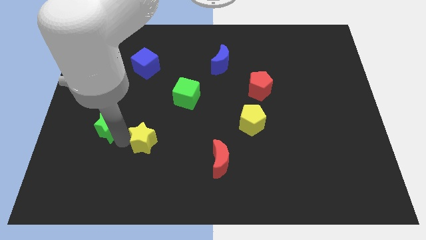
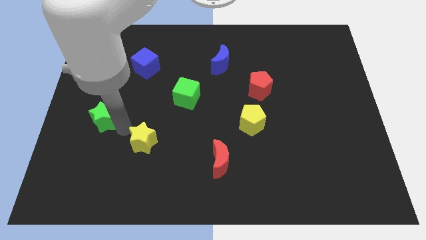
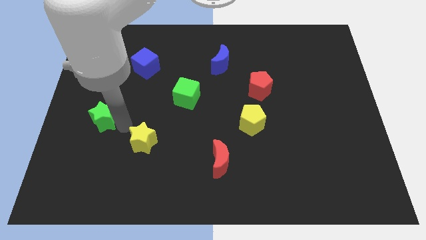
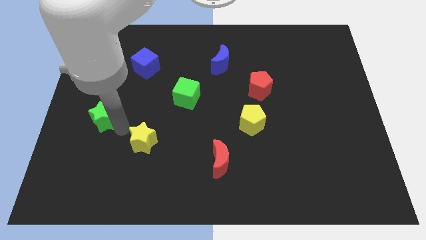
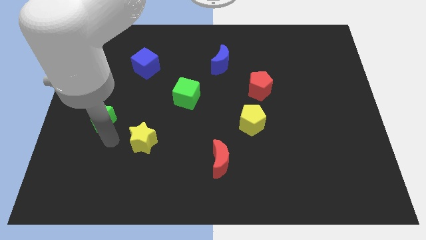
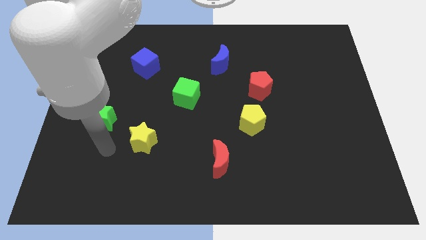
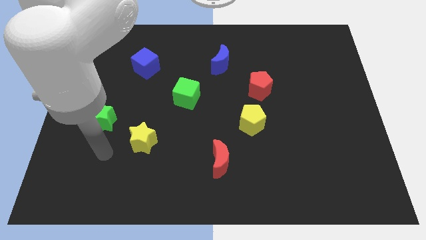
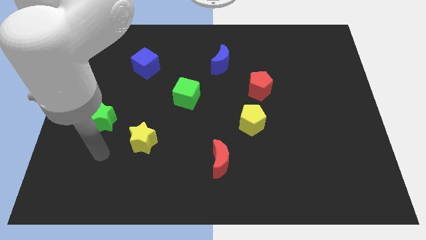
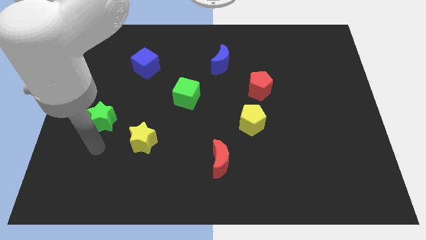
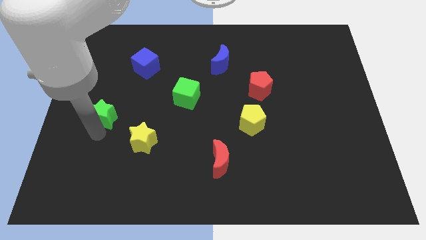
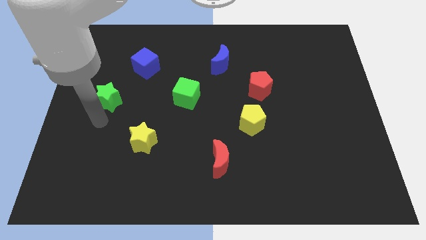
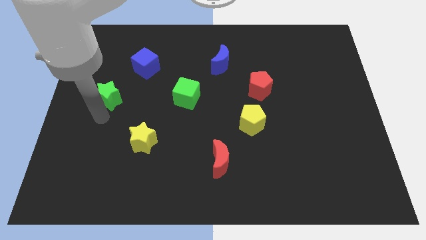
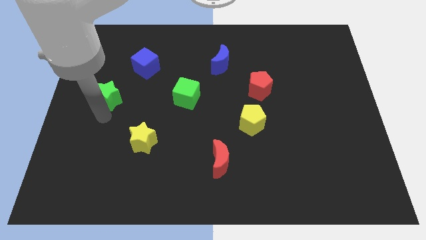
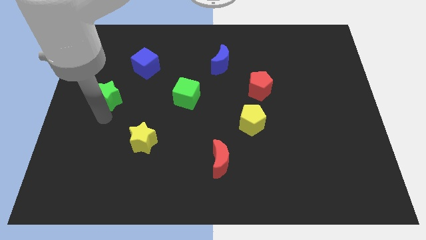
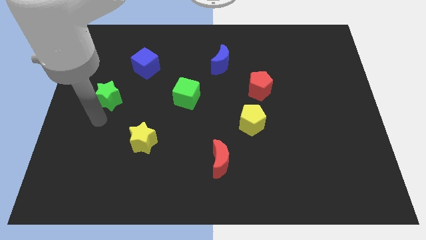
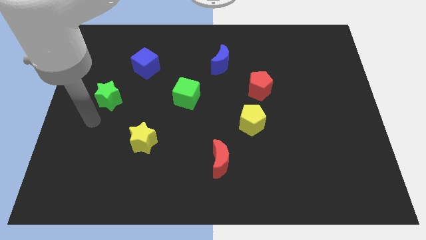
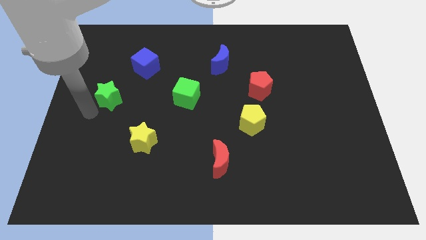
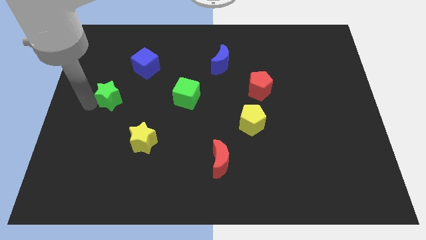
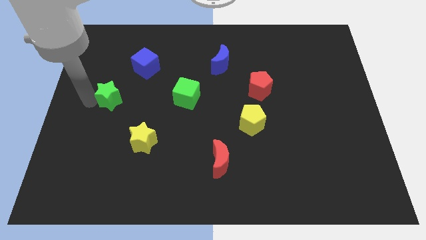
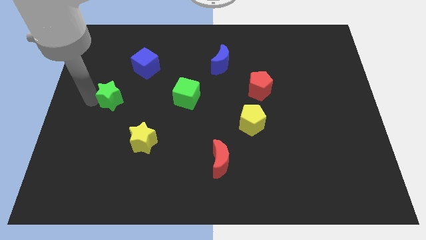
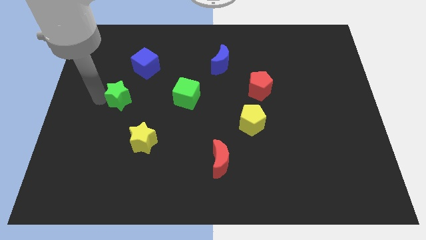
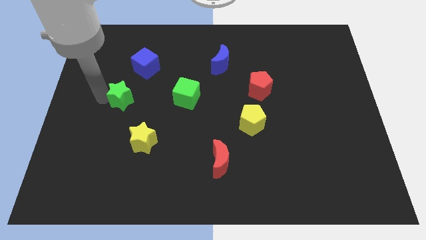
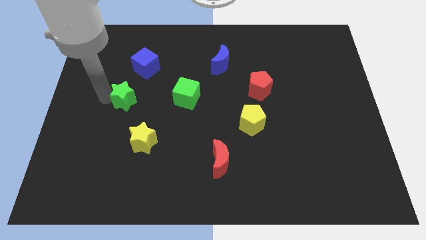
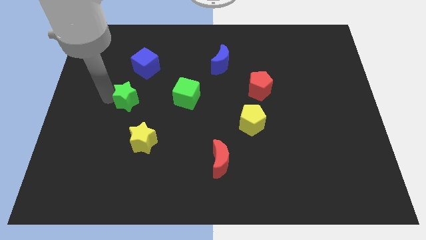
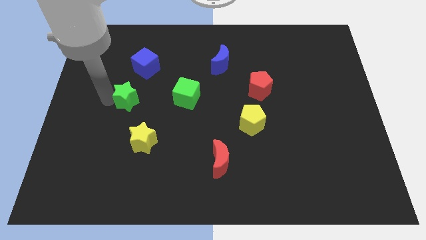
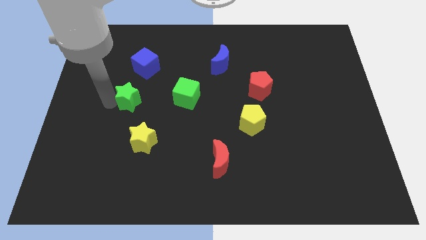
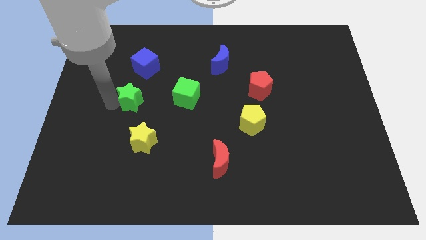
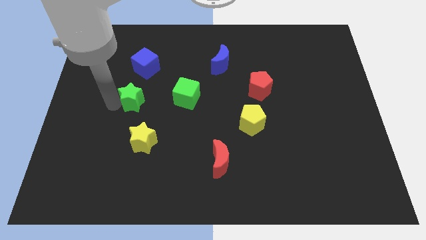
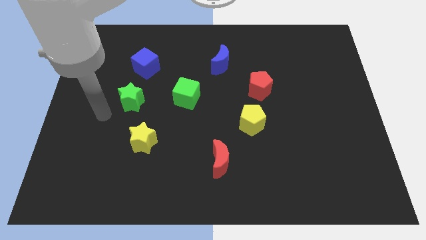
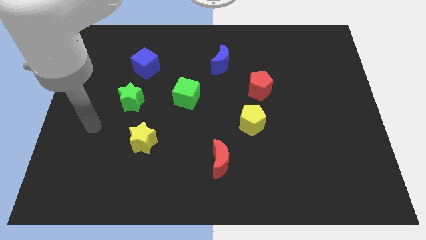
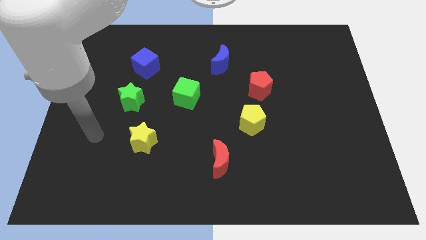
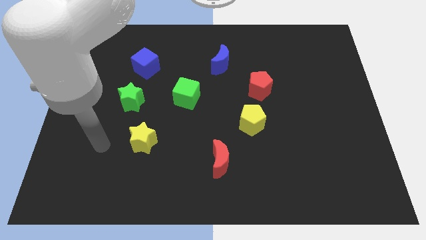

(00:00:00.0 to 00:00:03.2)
place the green star to the left of the green cube

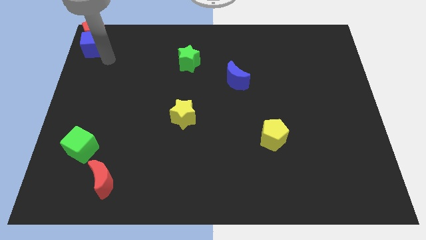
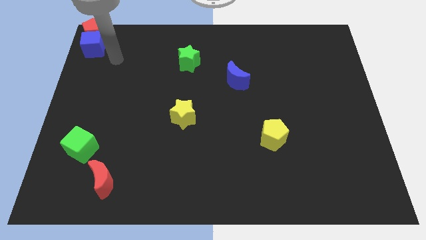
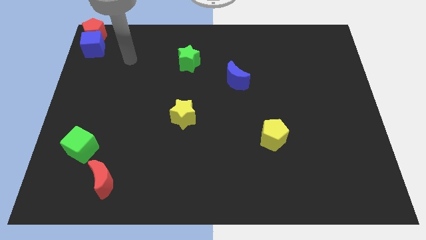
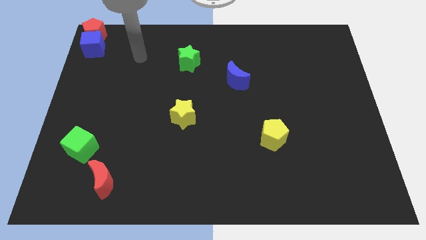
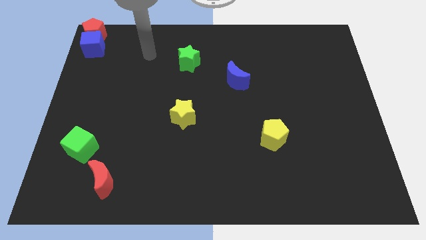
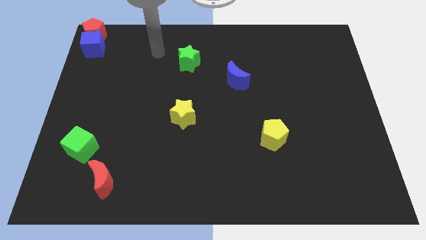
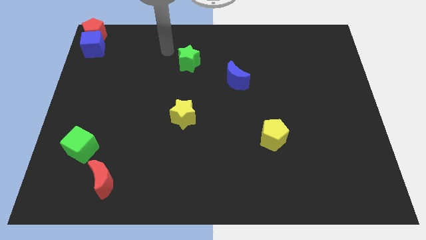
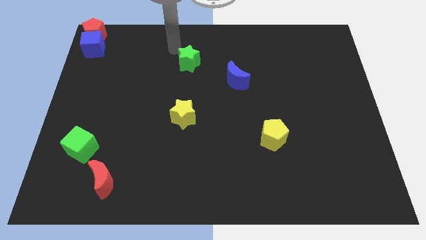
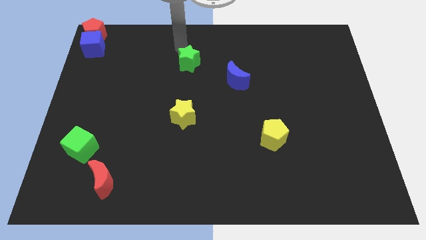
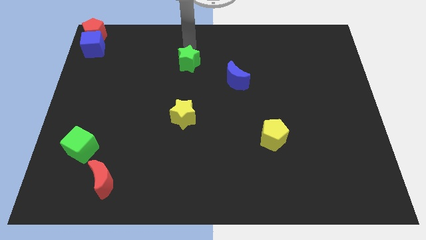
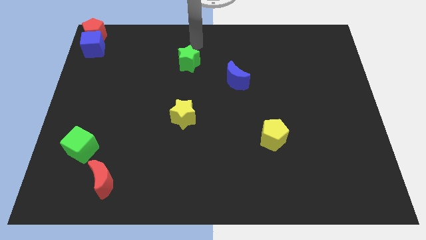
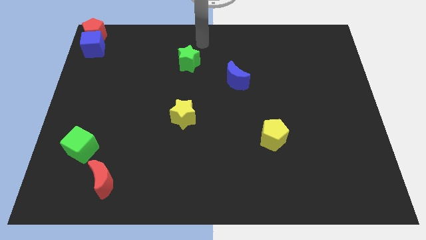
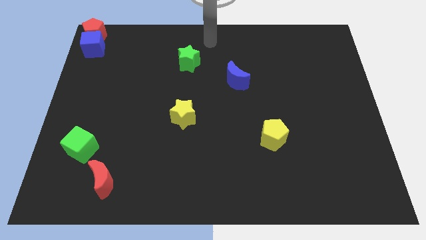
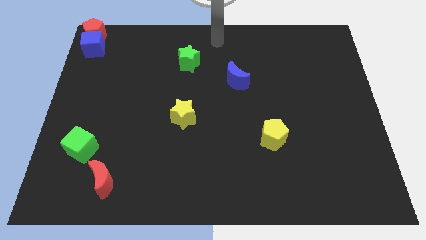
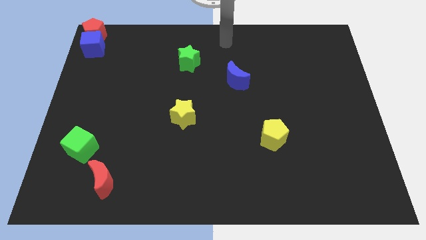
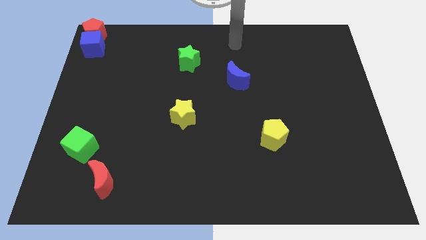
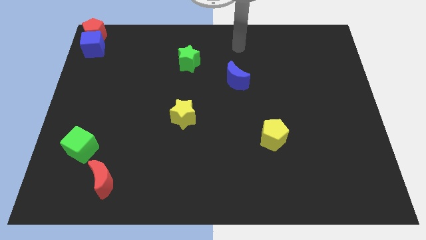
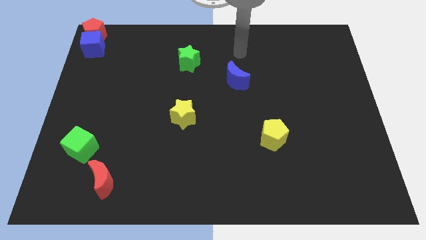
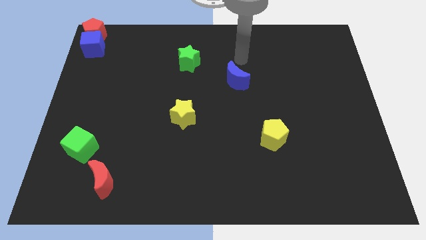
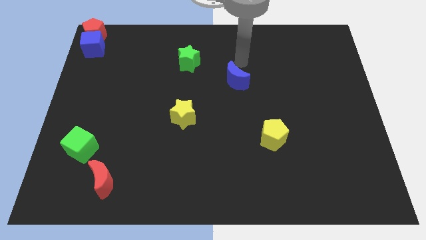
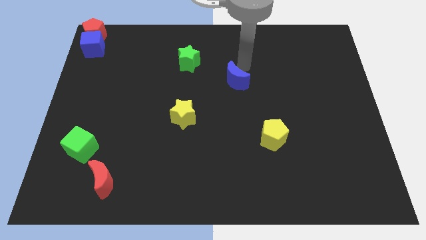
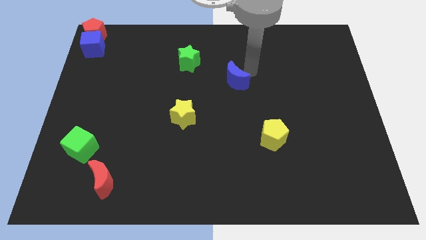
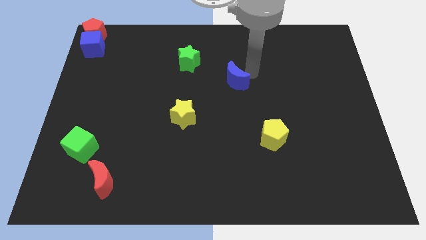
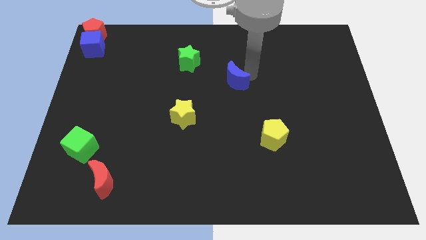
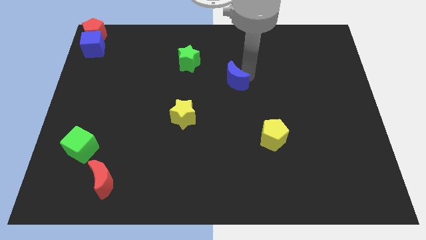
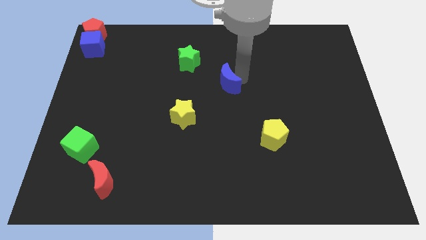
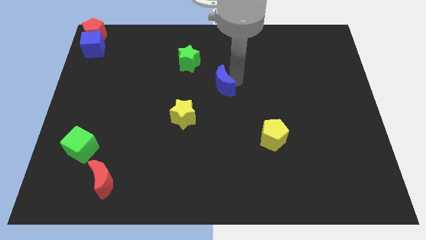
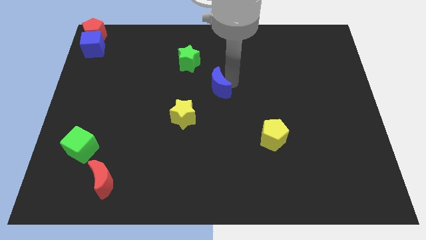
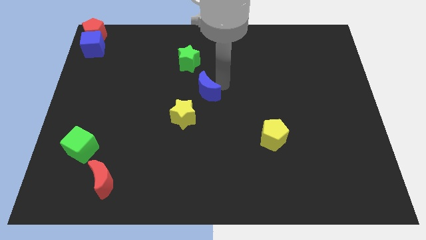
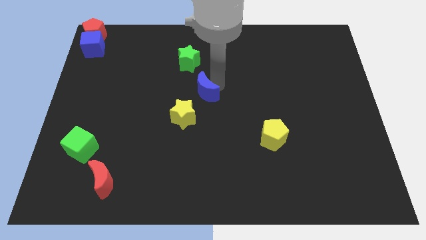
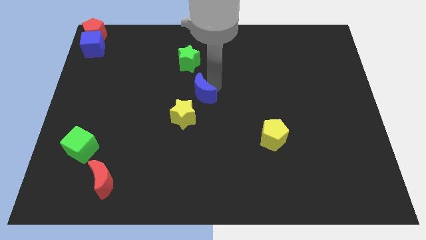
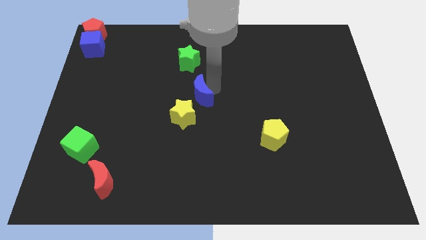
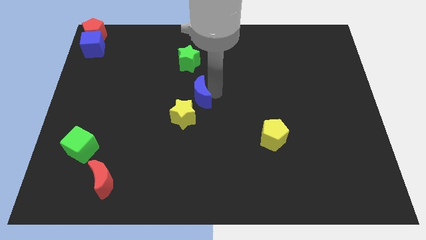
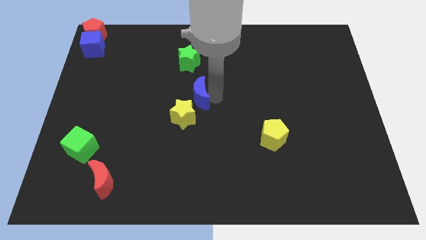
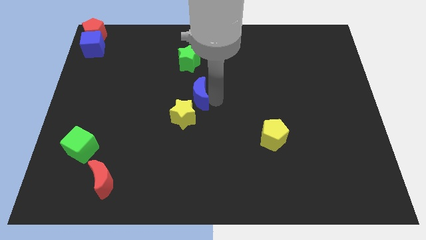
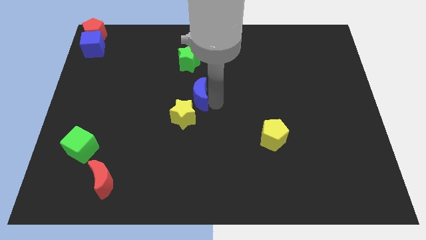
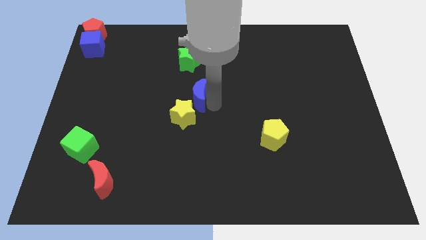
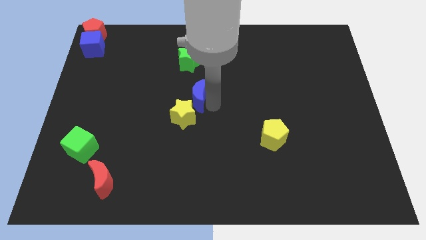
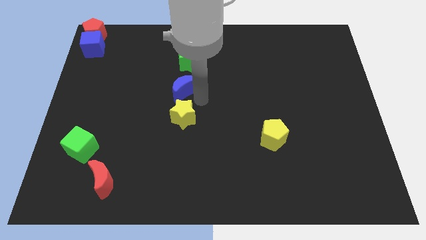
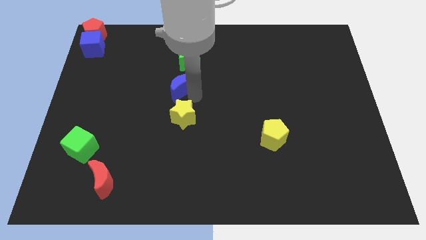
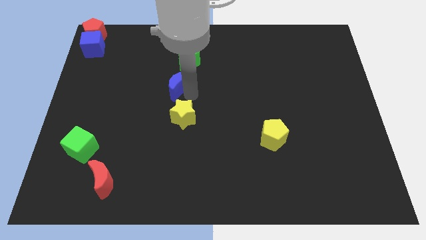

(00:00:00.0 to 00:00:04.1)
push the blue crescent to the top of the yellow star

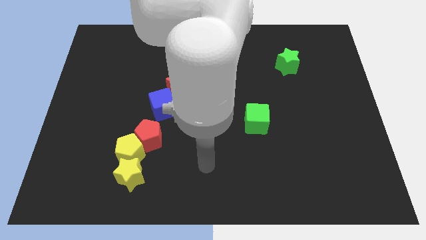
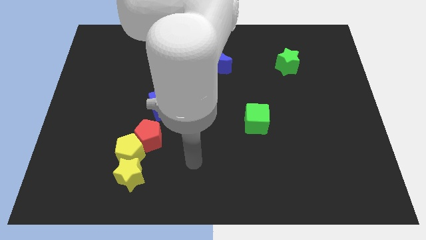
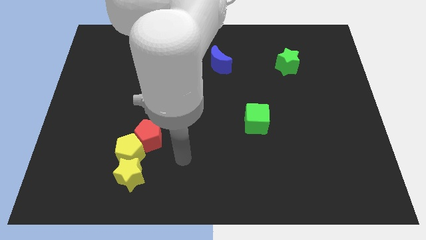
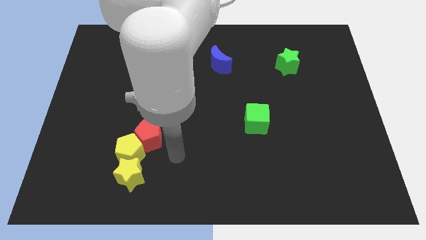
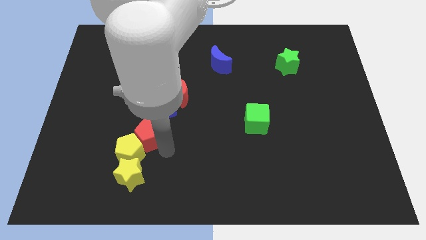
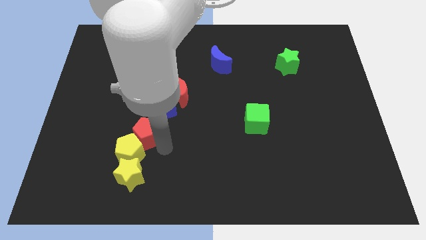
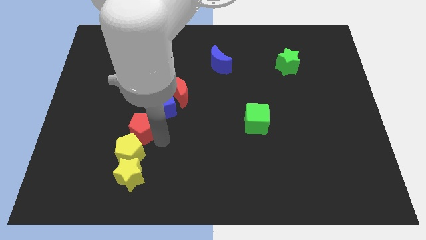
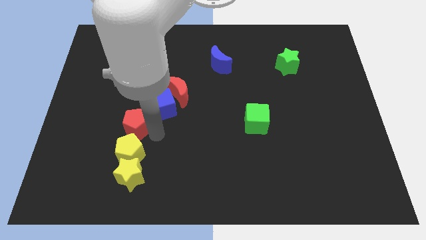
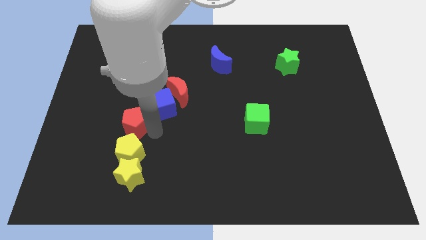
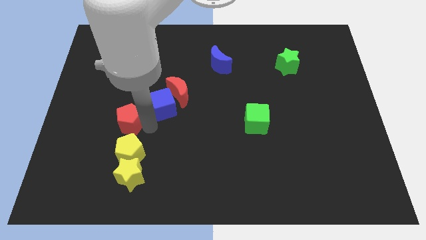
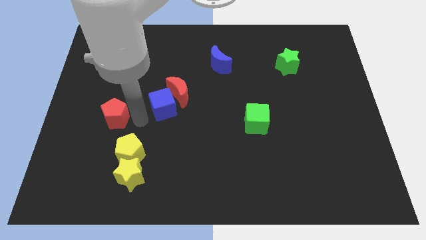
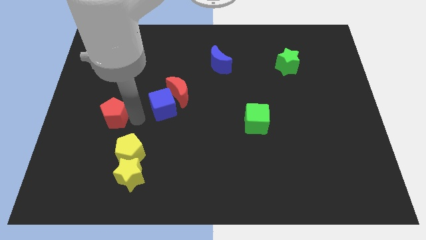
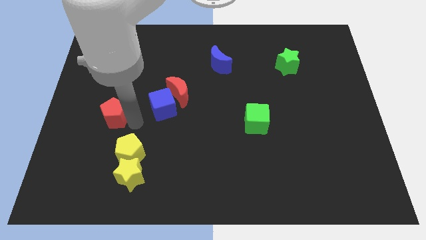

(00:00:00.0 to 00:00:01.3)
move red pentagon towards the left side of the board

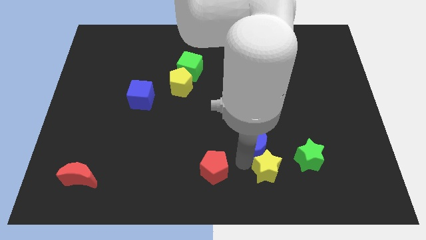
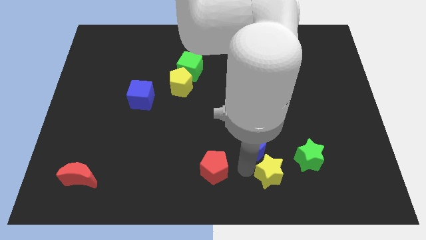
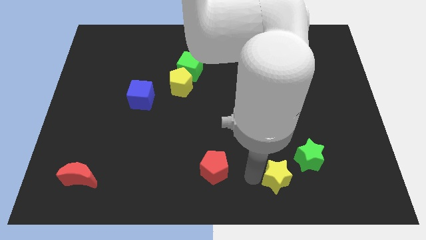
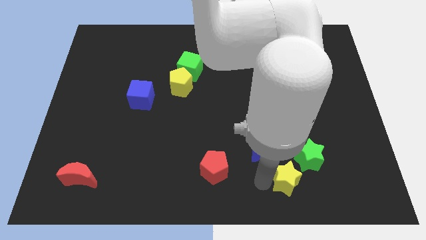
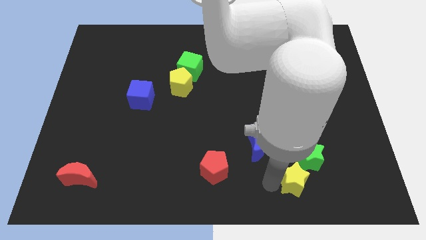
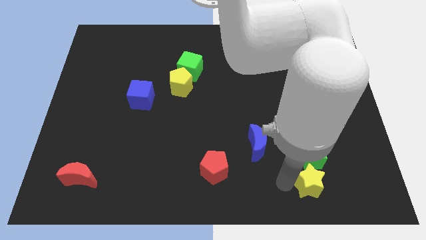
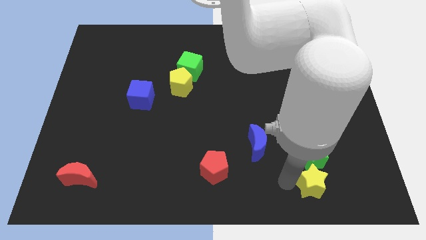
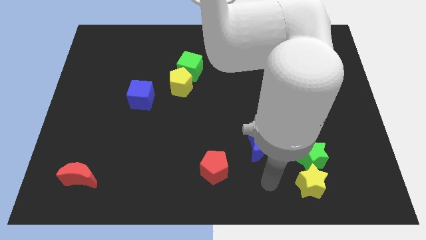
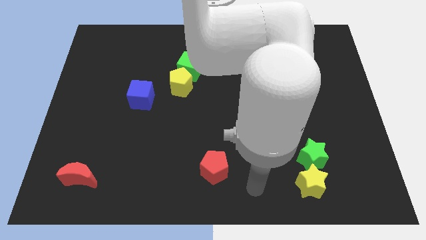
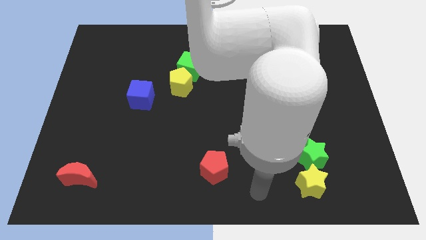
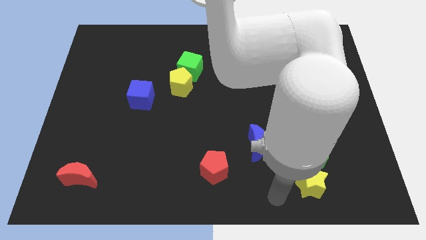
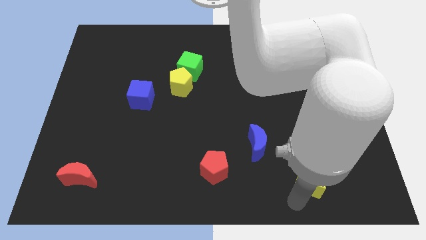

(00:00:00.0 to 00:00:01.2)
separate yellow star from blue moon
